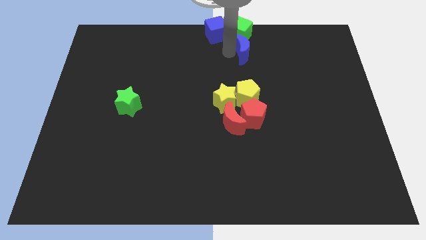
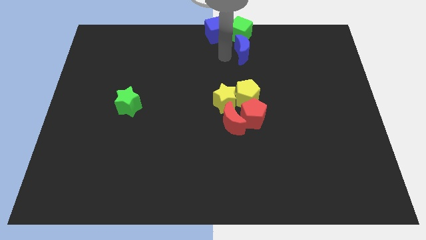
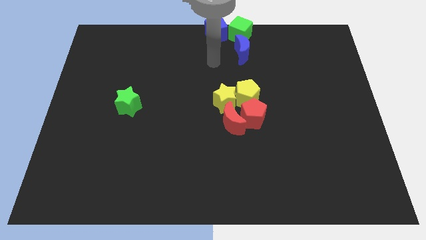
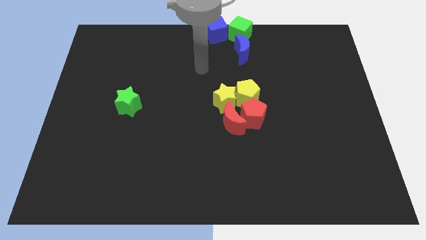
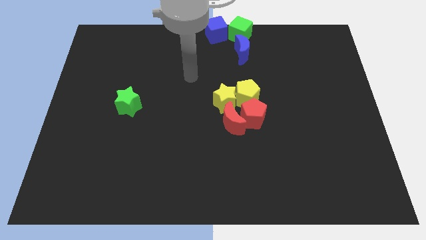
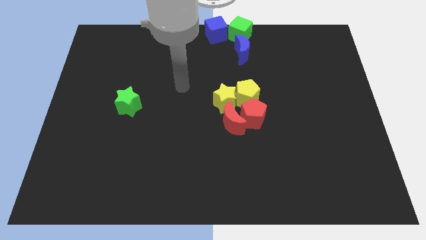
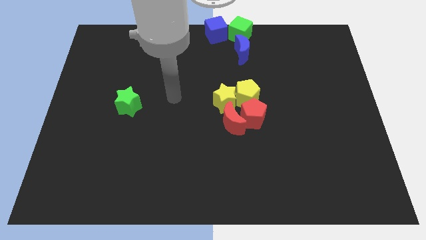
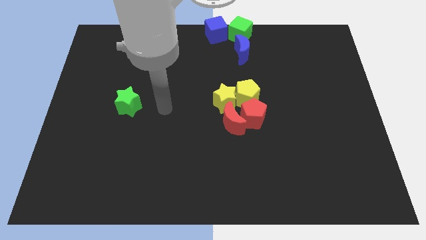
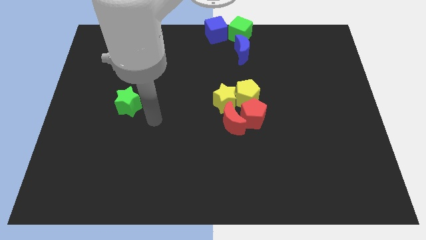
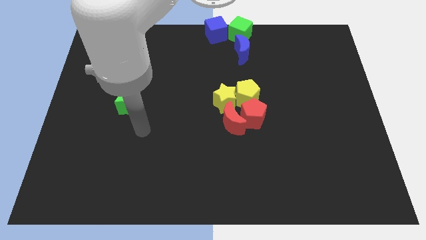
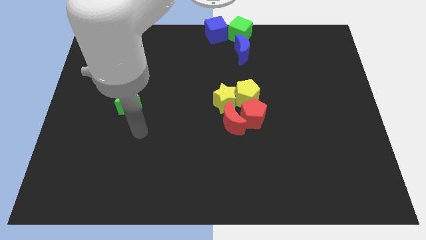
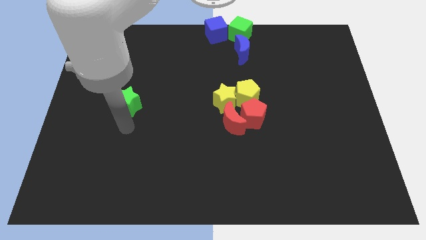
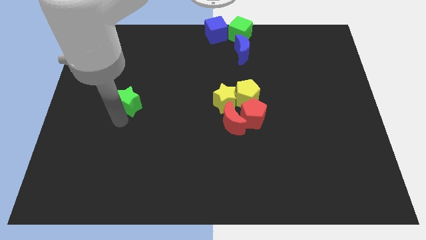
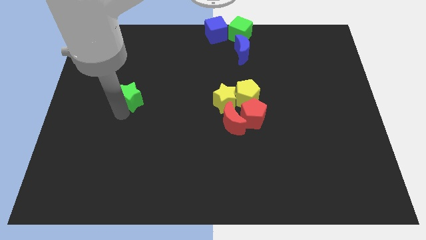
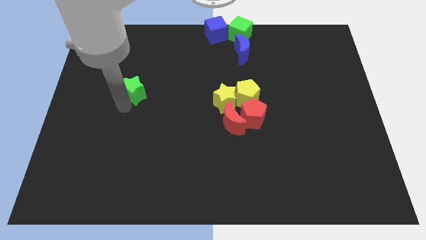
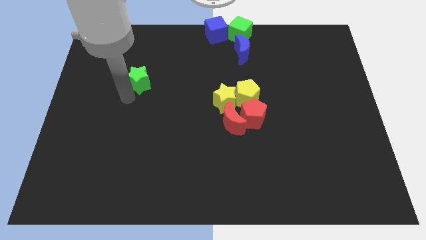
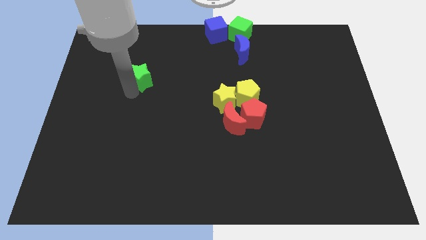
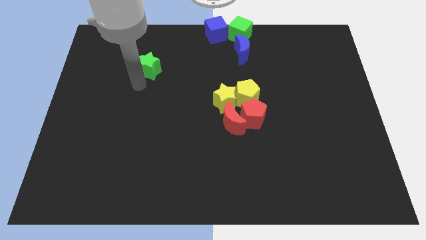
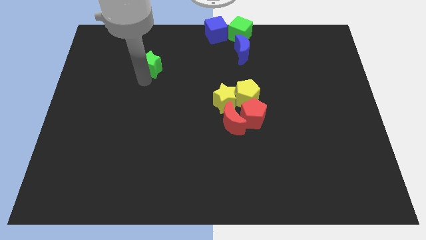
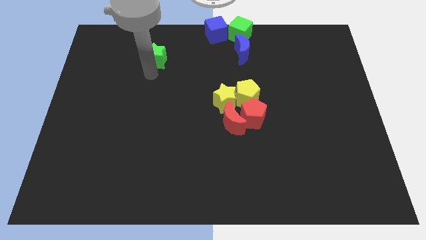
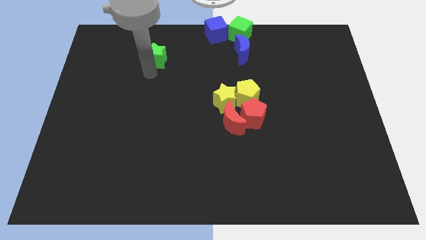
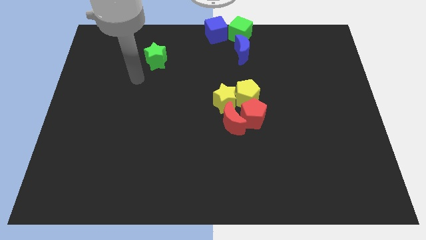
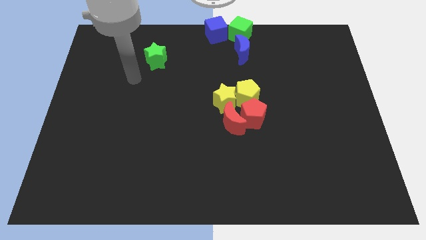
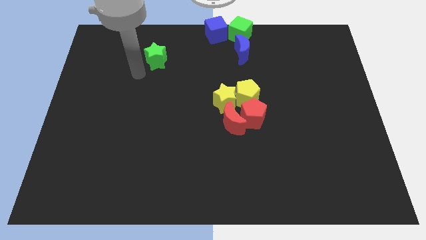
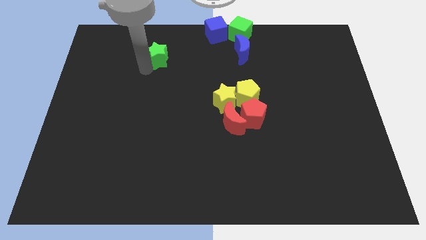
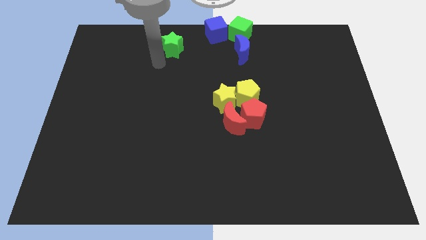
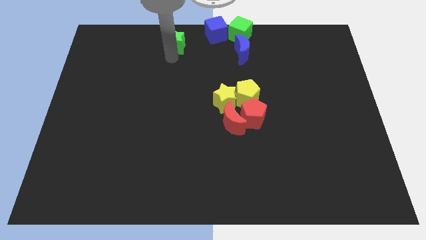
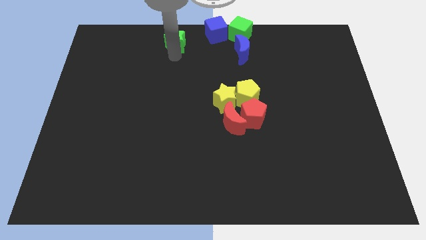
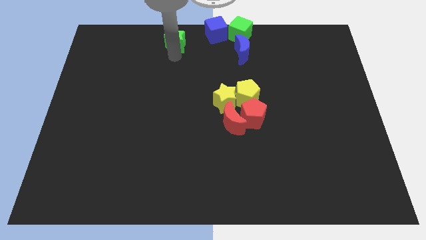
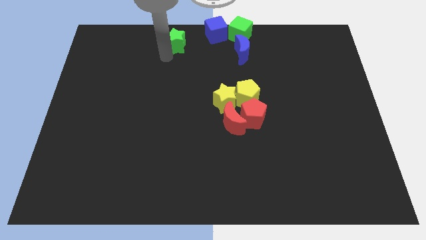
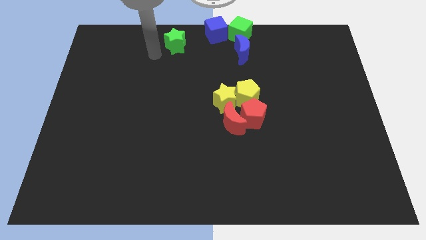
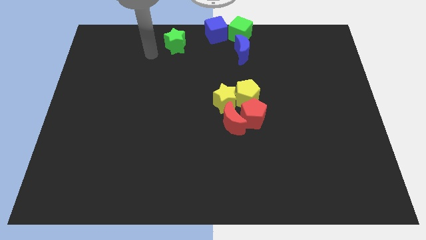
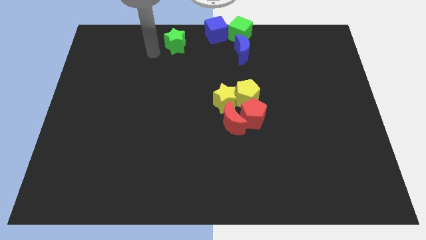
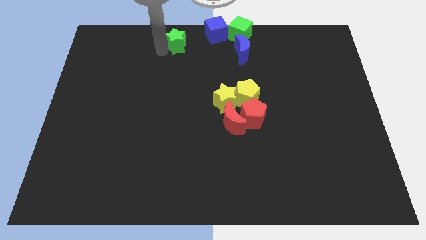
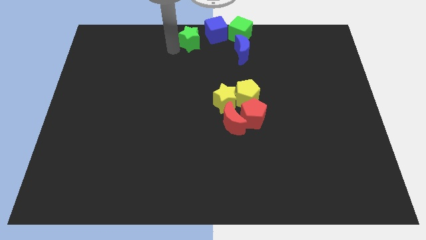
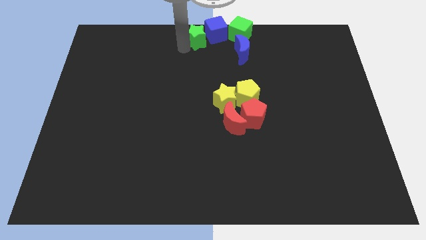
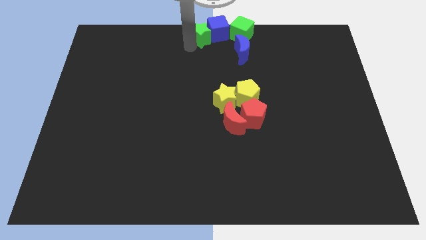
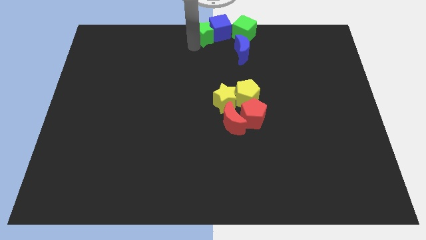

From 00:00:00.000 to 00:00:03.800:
slide the green star into the left side of the blue cube

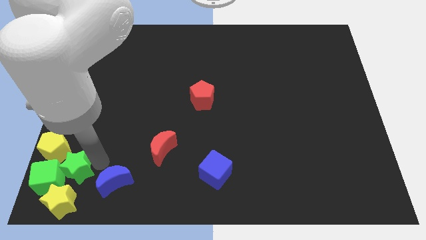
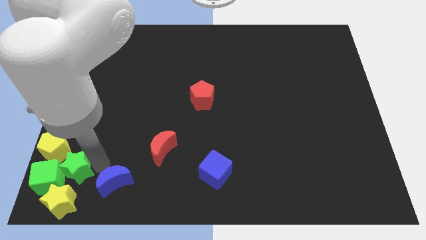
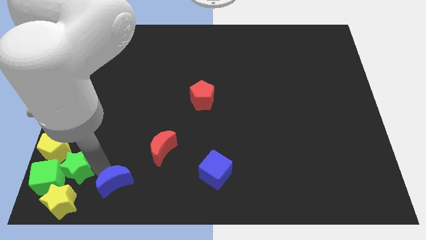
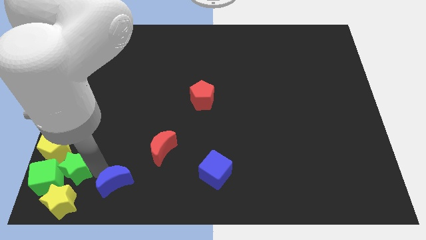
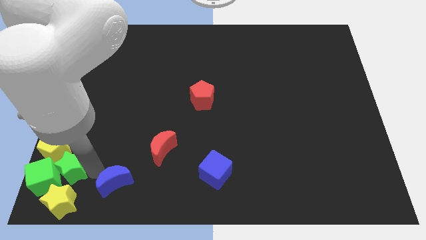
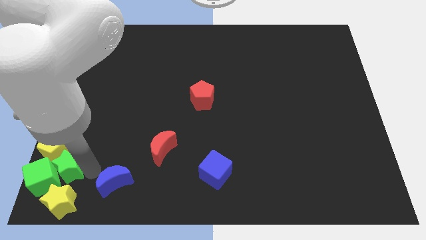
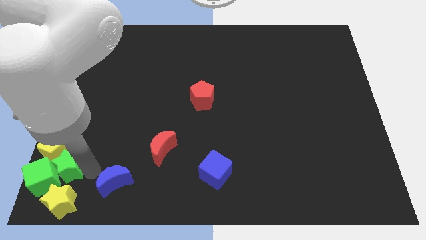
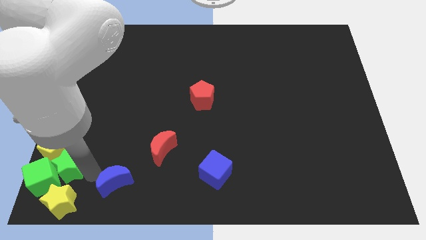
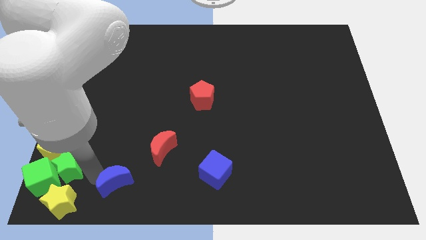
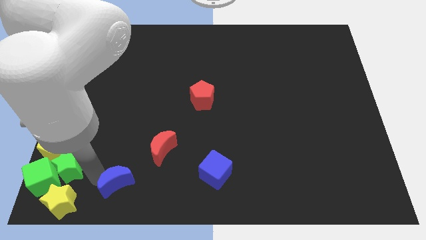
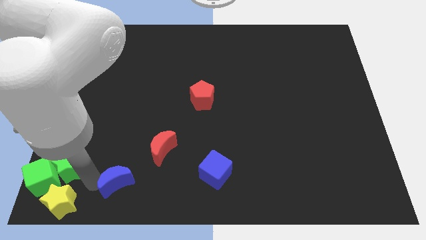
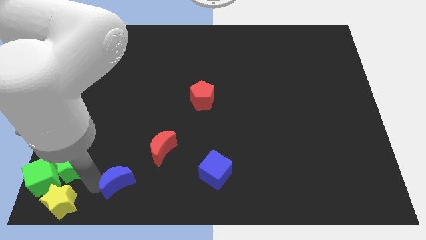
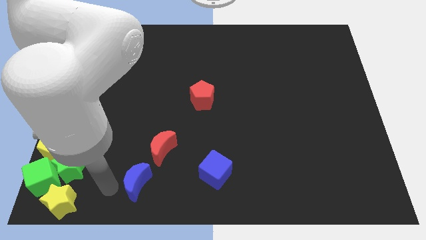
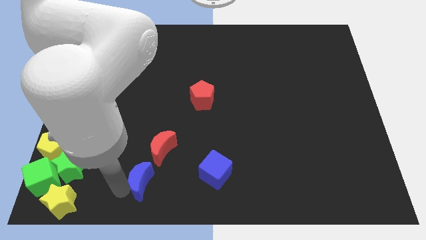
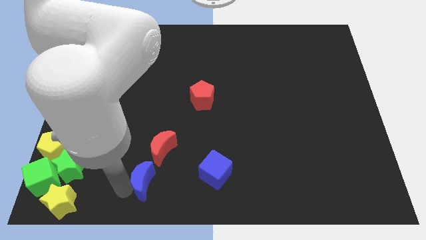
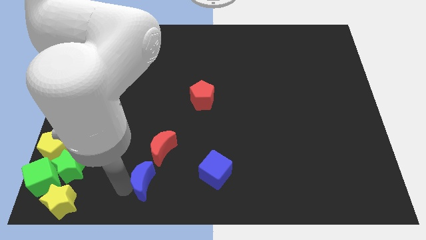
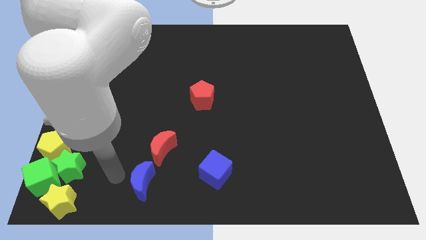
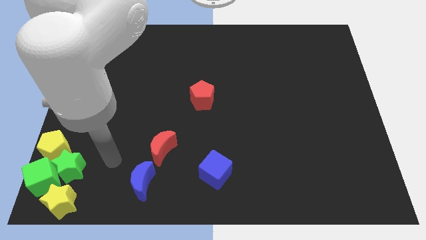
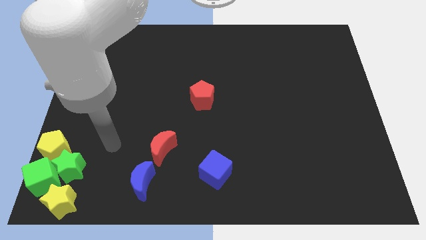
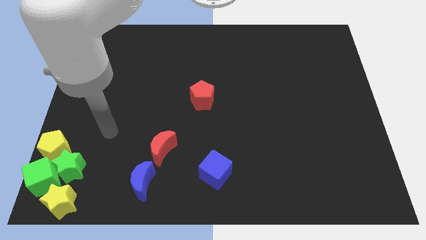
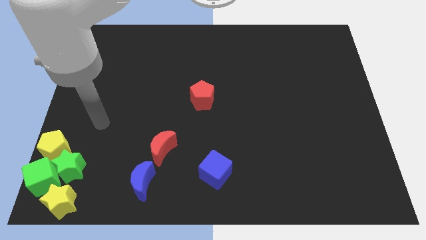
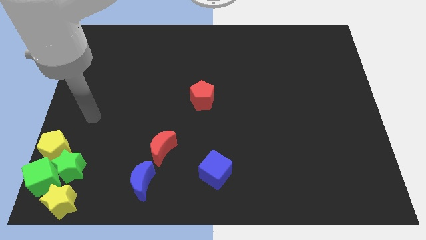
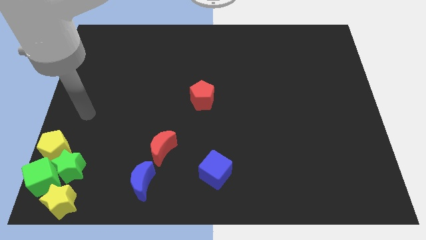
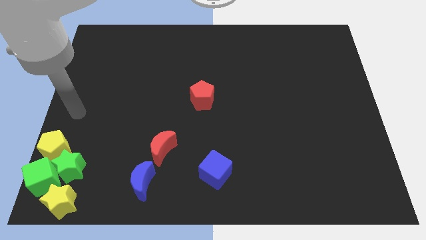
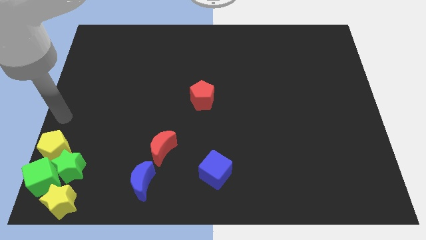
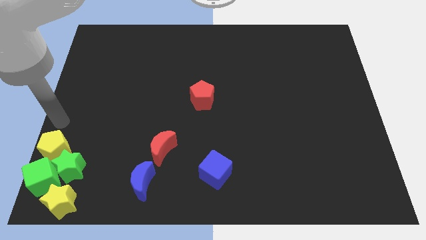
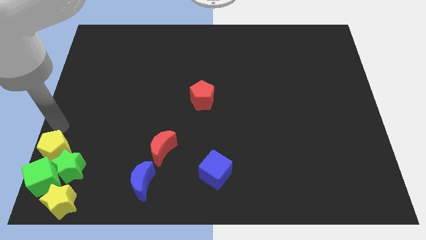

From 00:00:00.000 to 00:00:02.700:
place blue crescent down to the red crescent

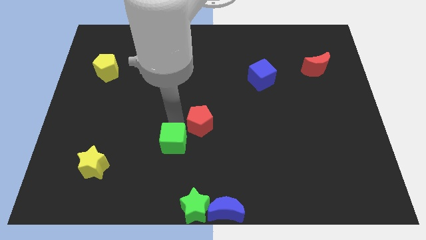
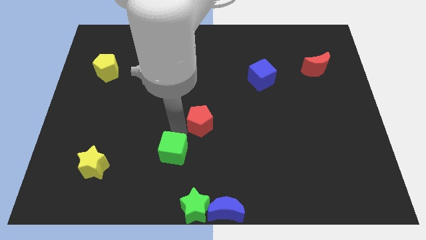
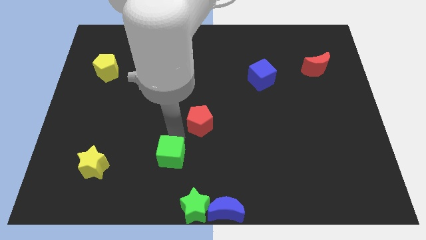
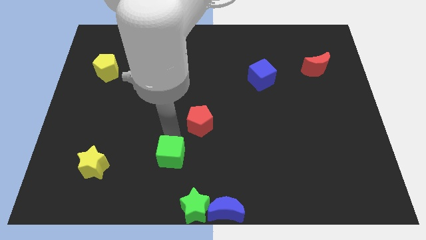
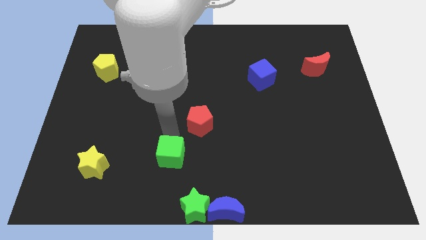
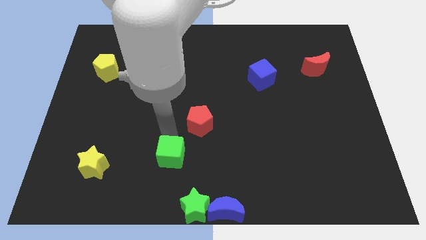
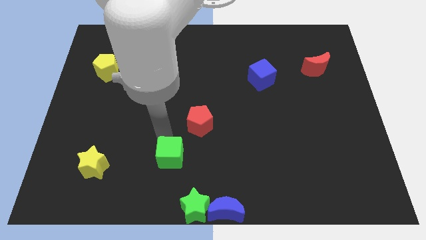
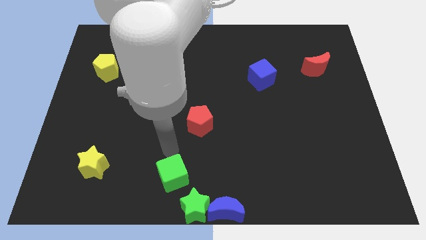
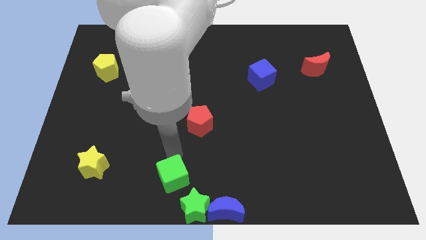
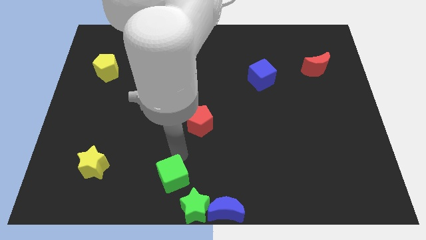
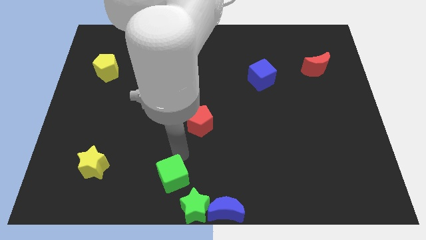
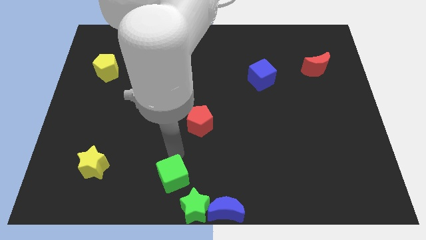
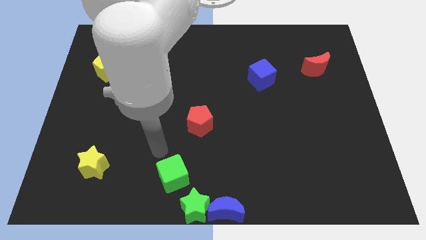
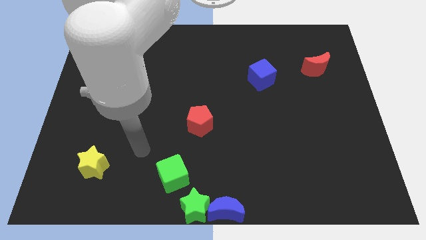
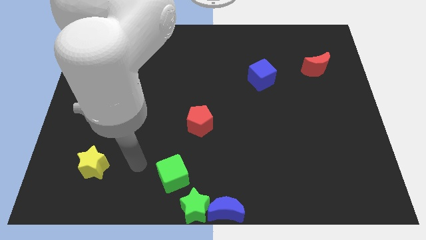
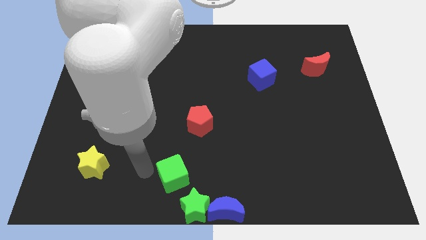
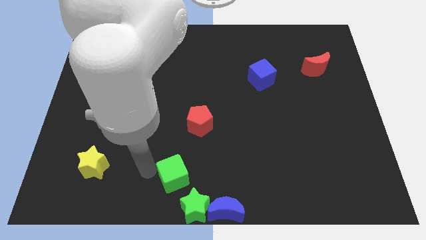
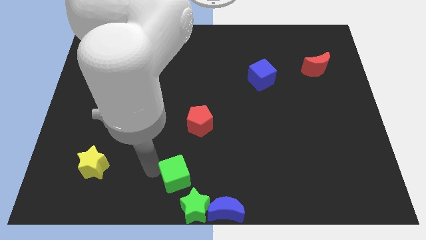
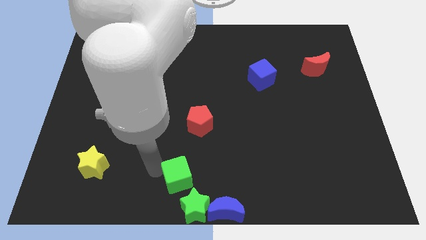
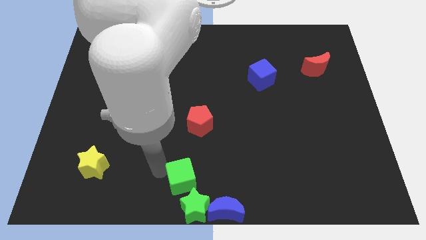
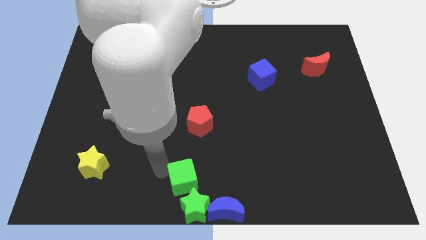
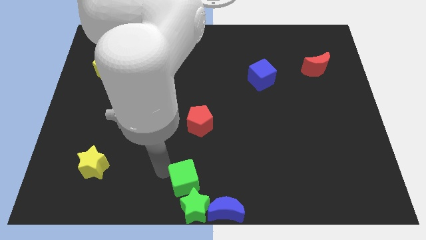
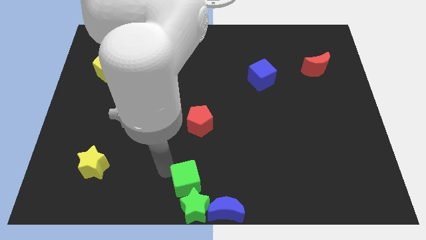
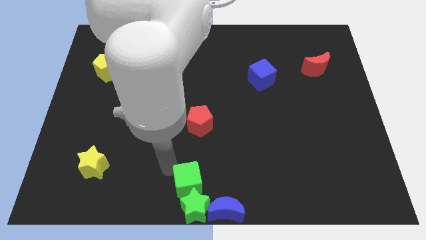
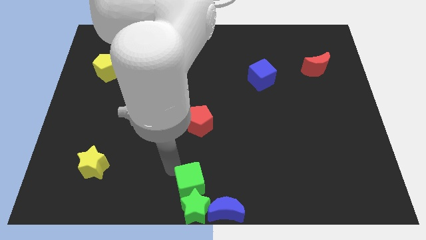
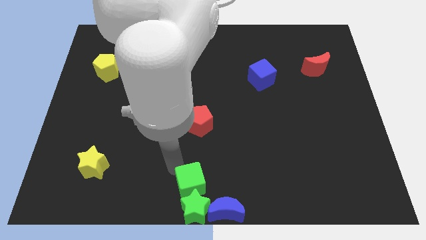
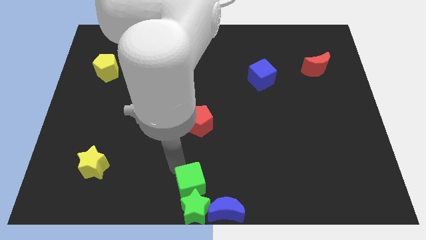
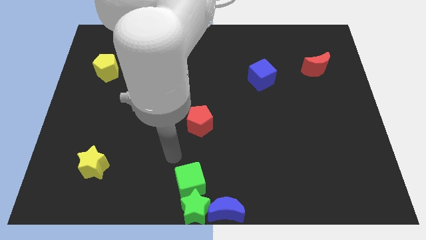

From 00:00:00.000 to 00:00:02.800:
move the green cube above the green star diagonally
